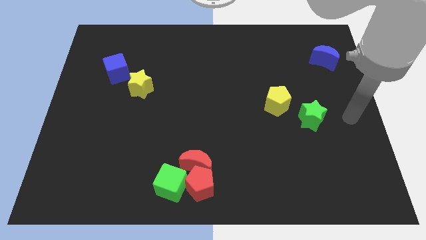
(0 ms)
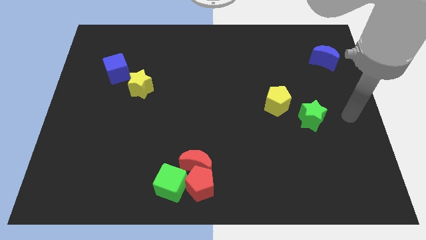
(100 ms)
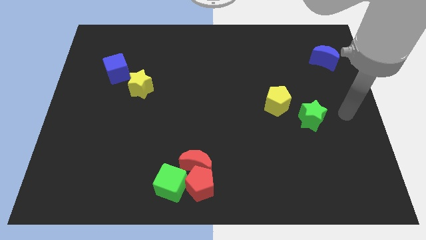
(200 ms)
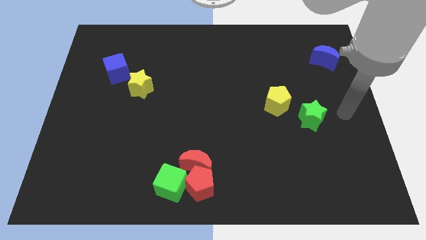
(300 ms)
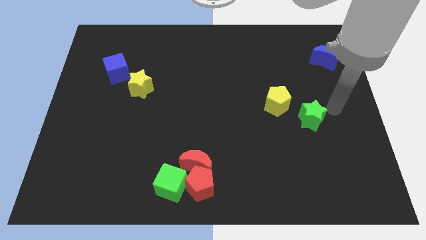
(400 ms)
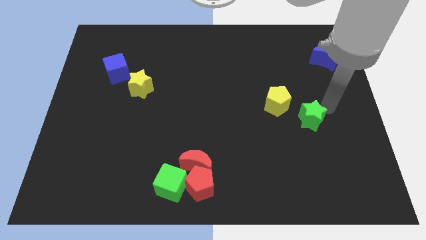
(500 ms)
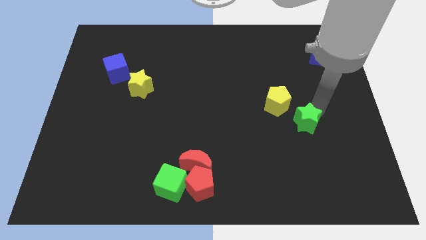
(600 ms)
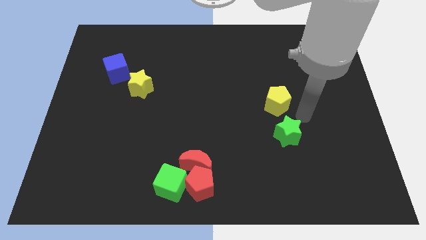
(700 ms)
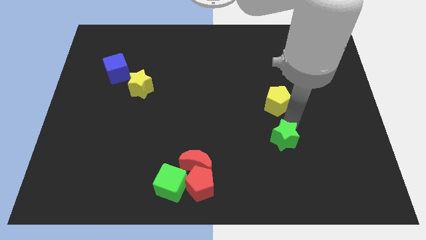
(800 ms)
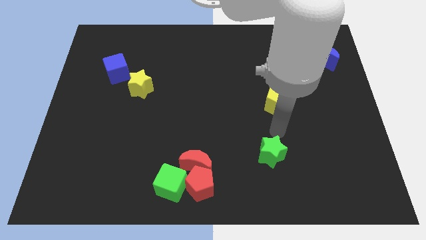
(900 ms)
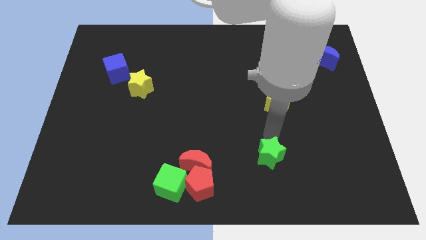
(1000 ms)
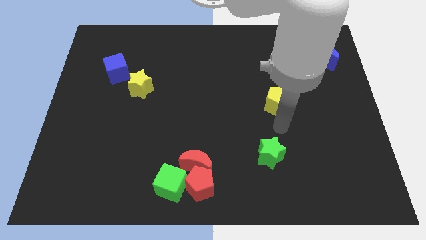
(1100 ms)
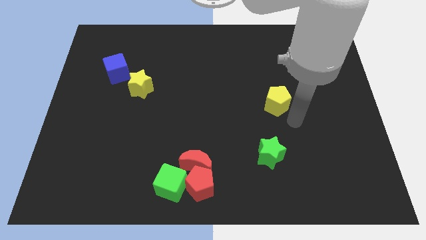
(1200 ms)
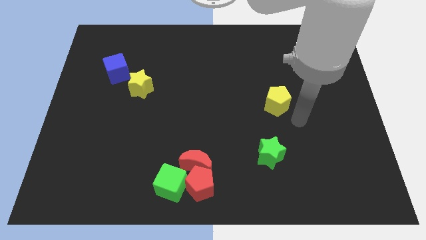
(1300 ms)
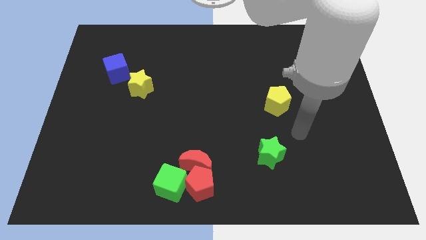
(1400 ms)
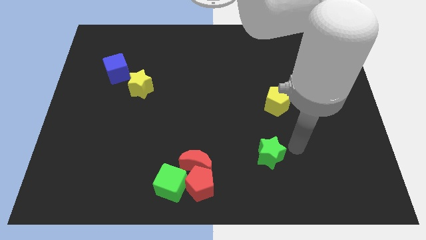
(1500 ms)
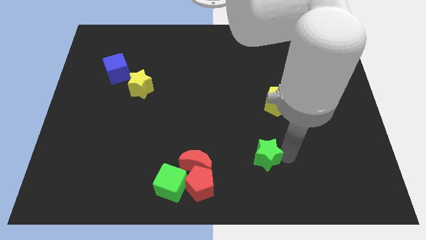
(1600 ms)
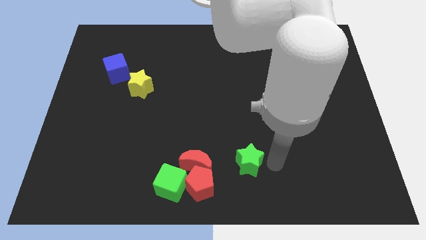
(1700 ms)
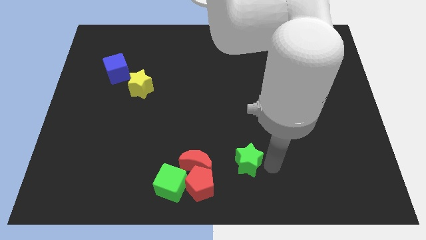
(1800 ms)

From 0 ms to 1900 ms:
push the green star towards the group of blocks

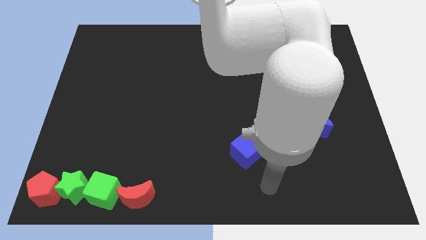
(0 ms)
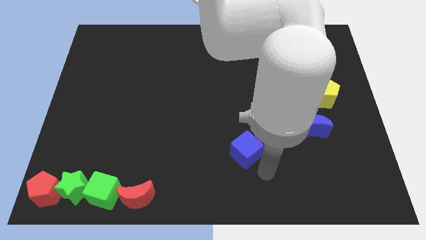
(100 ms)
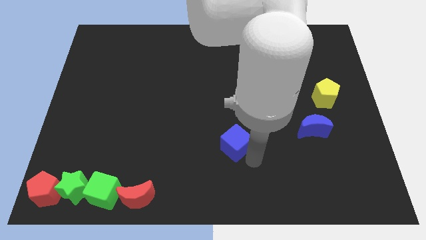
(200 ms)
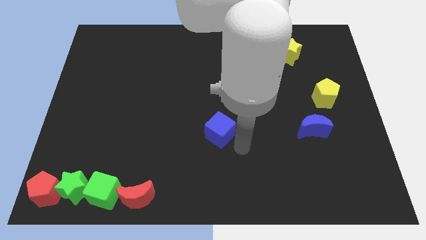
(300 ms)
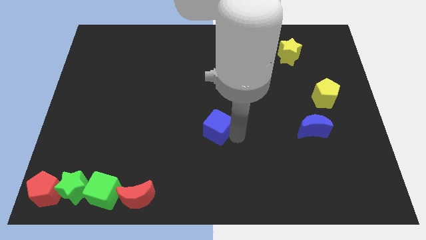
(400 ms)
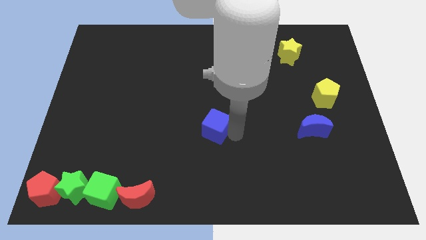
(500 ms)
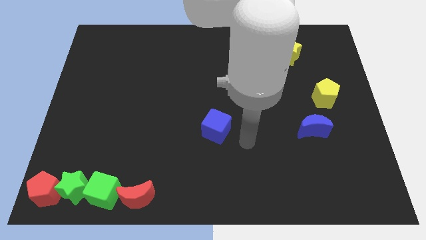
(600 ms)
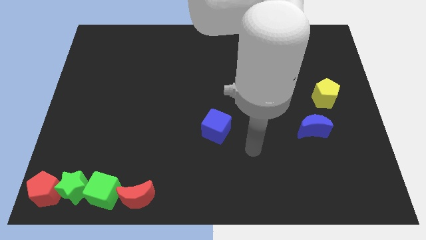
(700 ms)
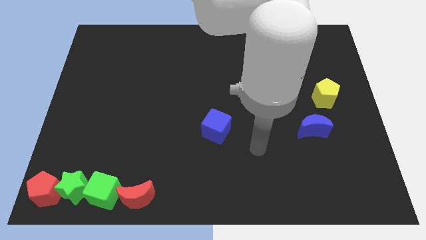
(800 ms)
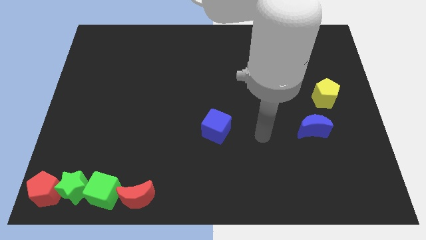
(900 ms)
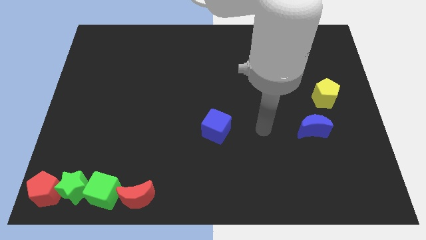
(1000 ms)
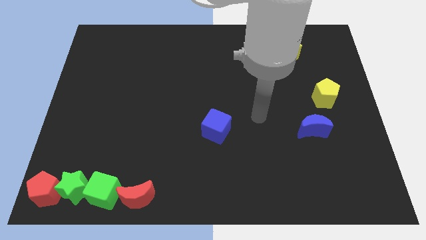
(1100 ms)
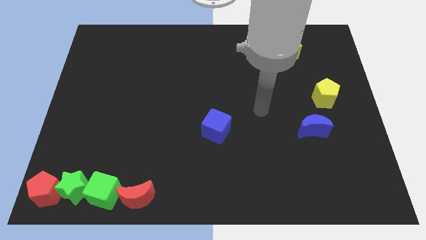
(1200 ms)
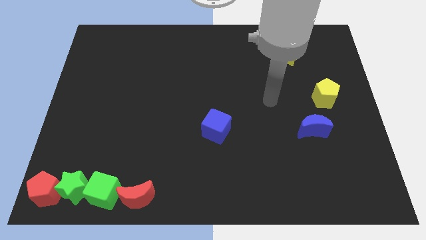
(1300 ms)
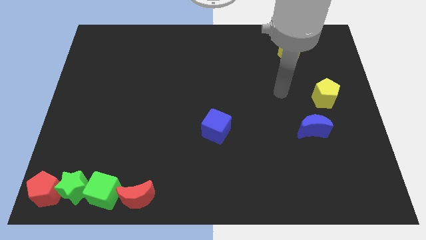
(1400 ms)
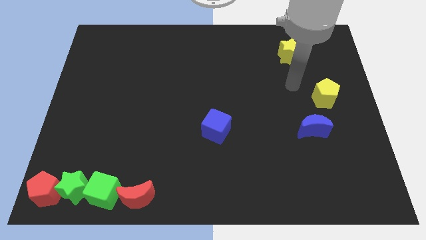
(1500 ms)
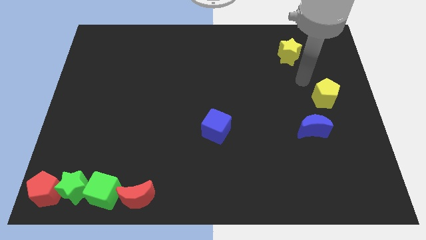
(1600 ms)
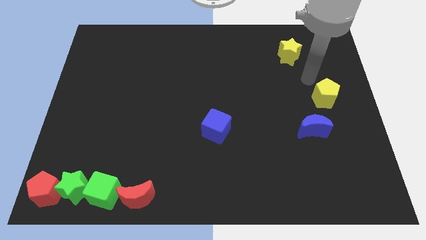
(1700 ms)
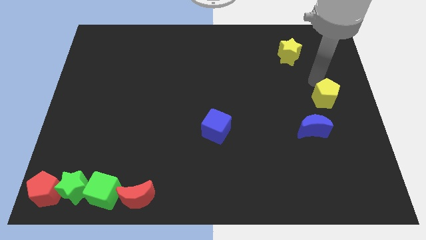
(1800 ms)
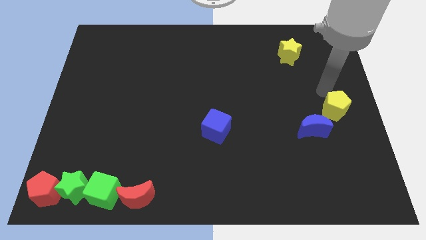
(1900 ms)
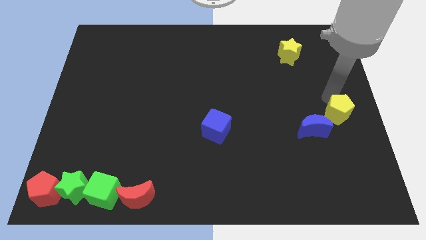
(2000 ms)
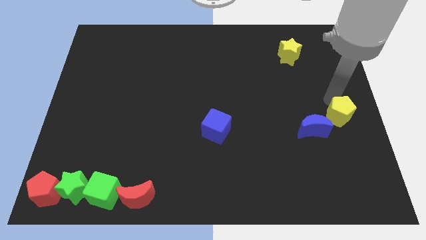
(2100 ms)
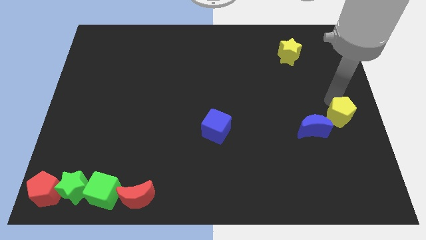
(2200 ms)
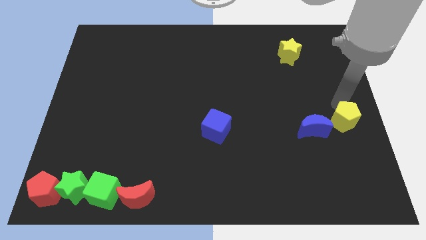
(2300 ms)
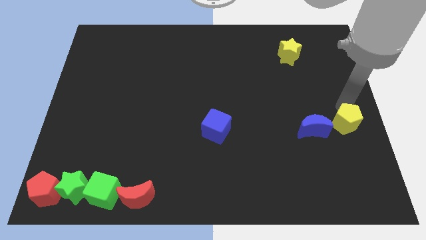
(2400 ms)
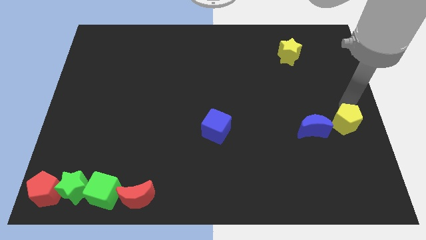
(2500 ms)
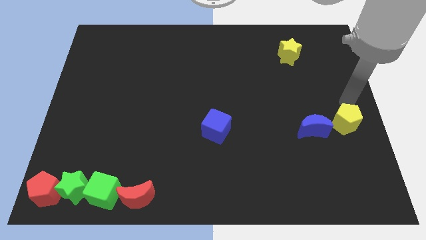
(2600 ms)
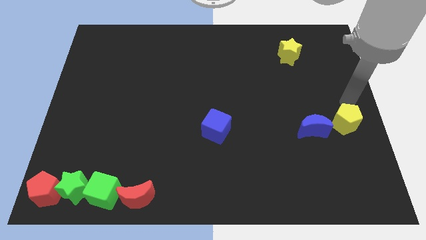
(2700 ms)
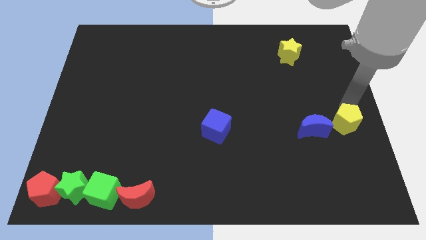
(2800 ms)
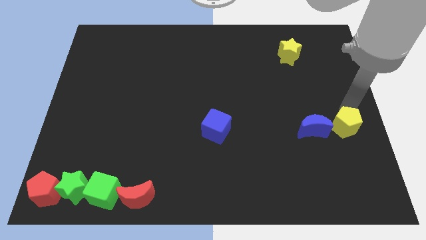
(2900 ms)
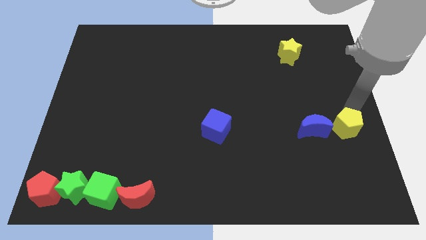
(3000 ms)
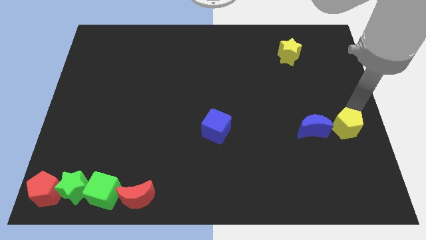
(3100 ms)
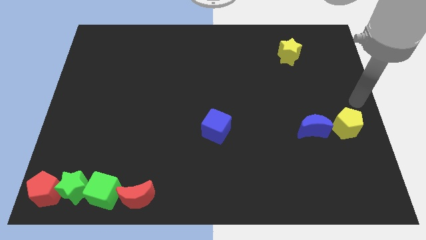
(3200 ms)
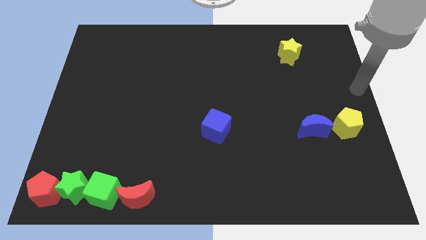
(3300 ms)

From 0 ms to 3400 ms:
push yellow pentagon beside blue crescent

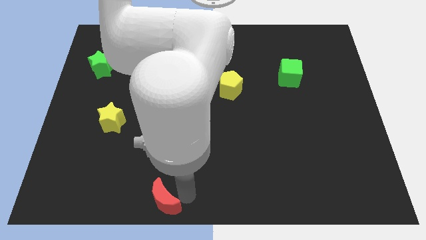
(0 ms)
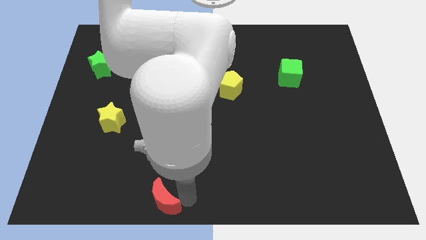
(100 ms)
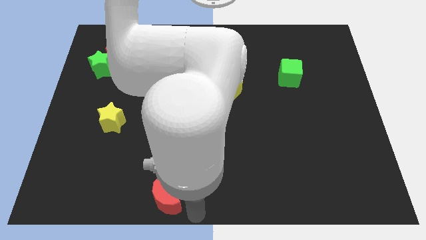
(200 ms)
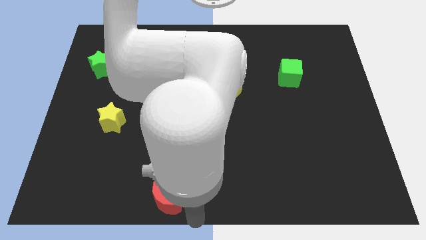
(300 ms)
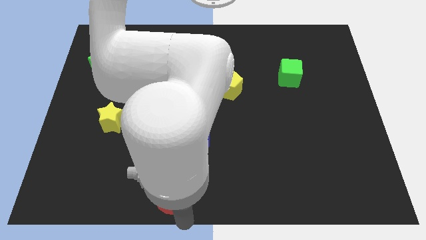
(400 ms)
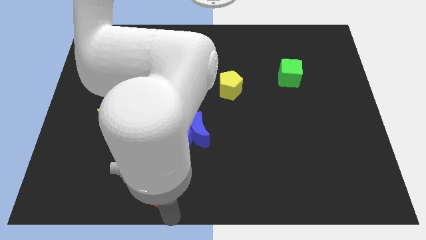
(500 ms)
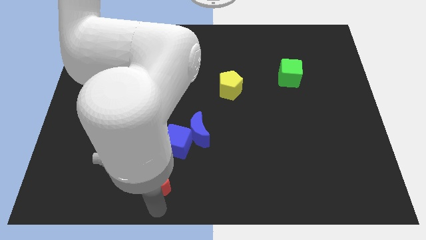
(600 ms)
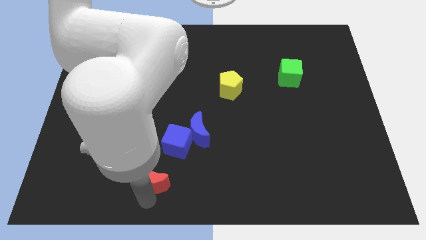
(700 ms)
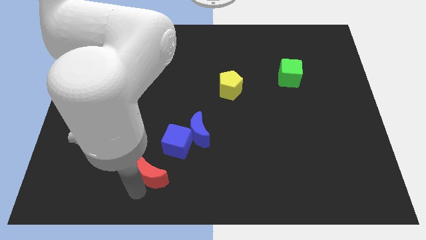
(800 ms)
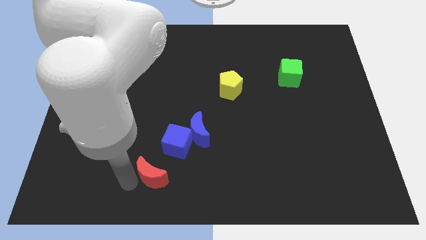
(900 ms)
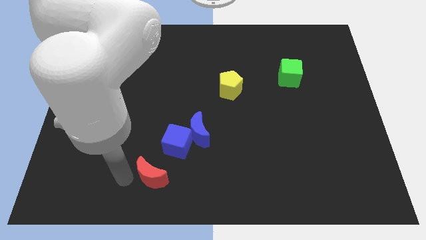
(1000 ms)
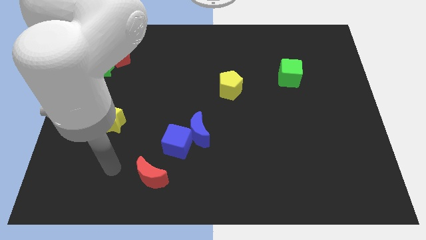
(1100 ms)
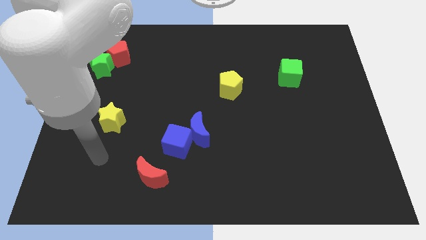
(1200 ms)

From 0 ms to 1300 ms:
push red crescent towards the bottom side of the blue cube

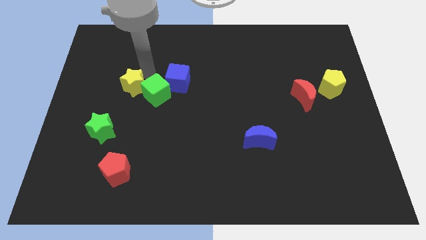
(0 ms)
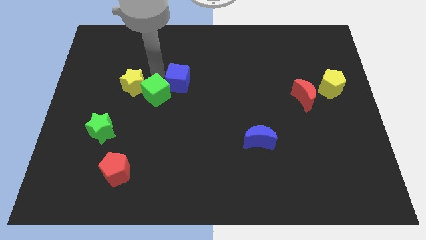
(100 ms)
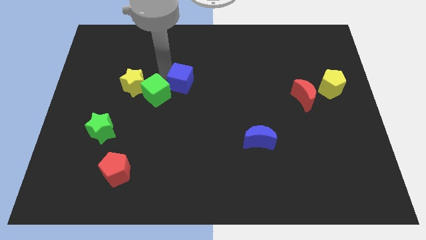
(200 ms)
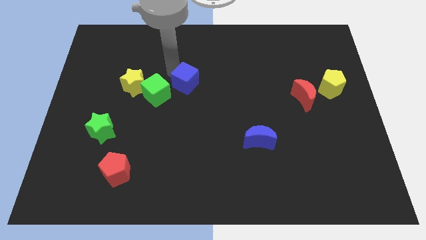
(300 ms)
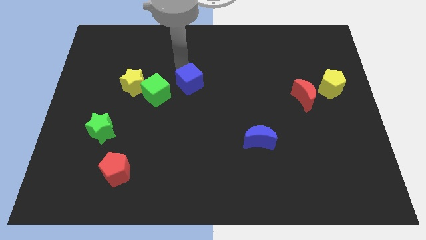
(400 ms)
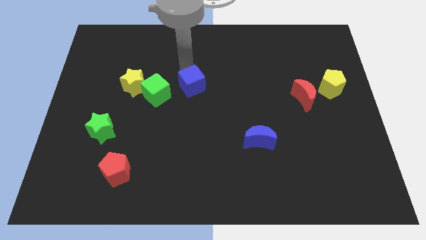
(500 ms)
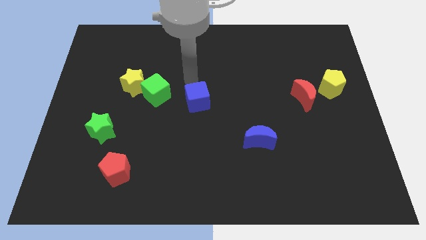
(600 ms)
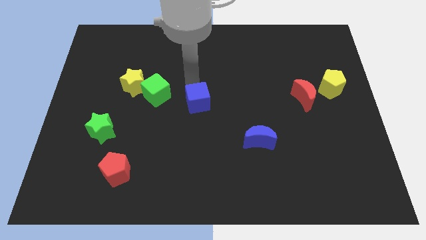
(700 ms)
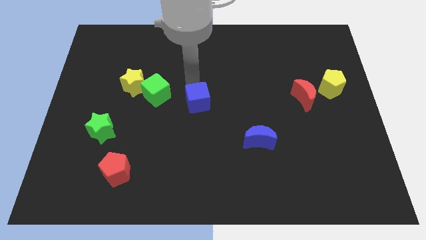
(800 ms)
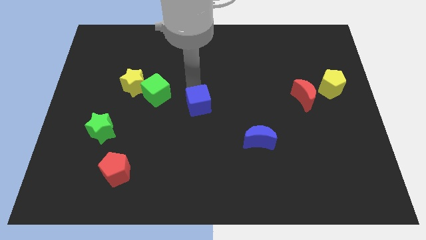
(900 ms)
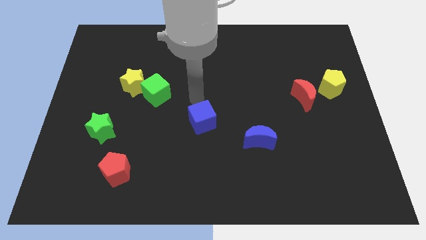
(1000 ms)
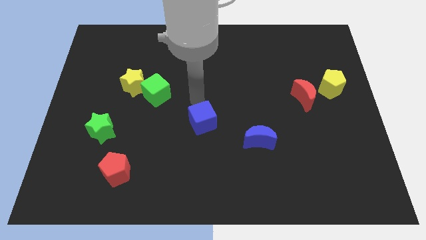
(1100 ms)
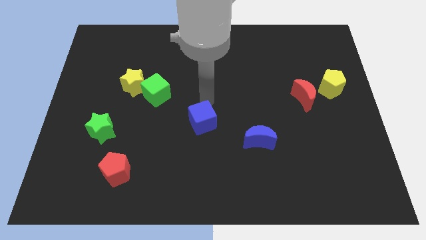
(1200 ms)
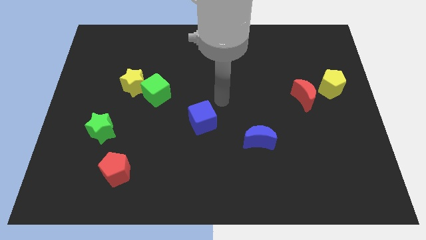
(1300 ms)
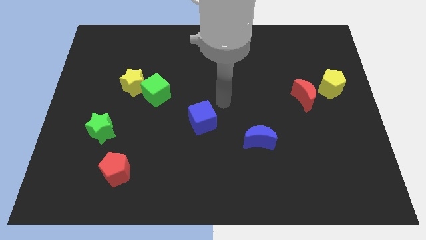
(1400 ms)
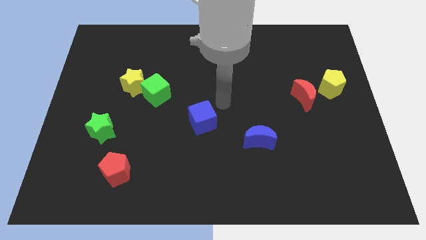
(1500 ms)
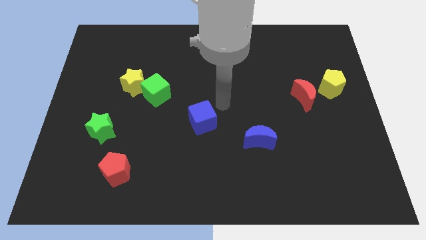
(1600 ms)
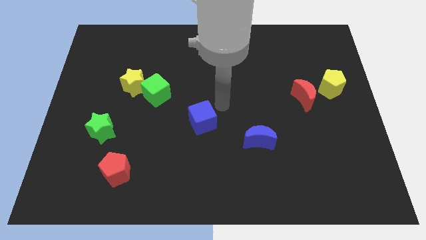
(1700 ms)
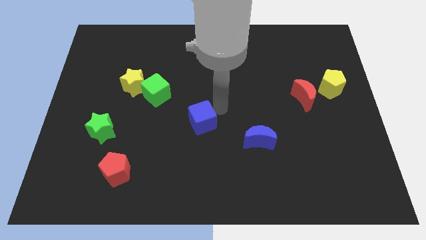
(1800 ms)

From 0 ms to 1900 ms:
place the blue cube diagonally below red pentagon

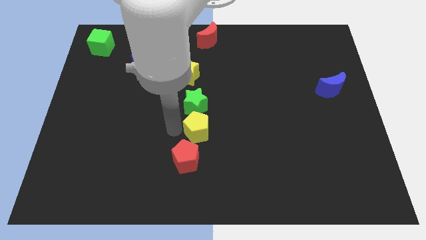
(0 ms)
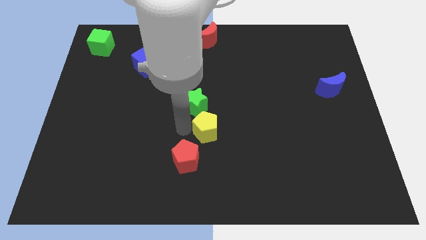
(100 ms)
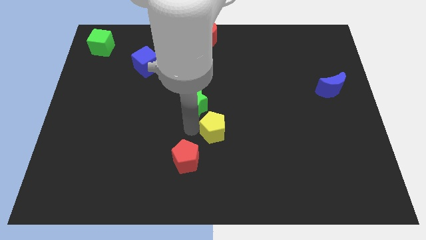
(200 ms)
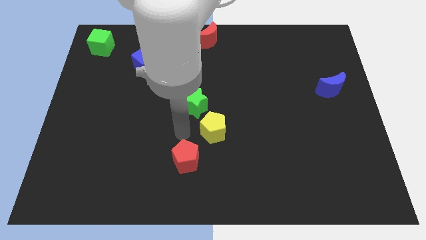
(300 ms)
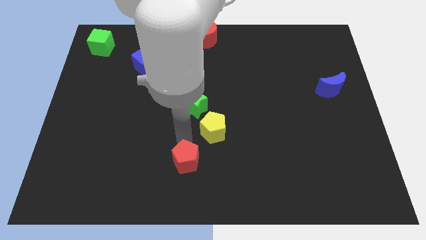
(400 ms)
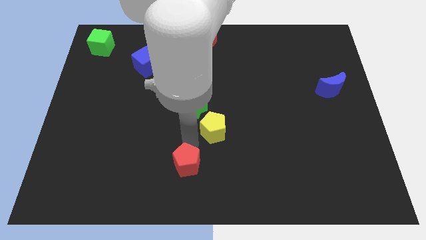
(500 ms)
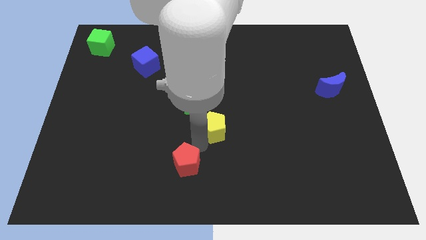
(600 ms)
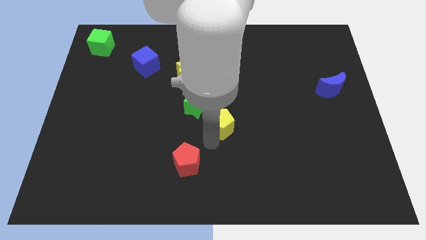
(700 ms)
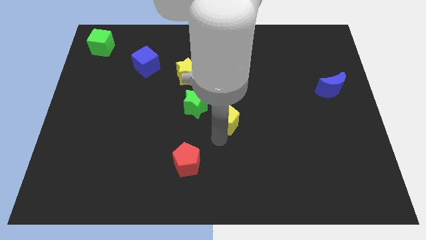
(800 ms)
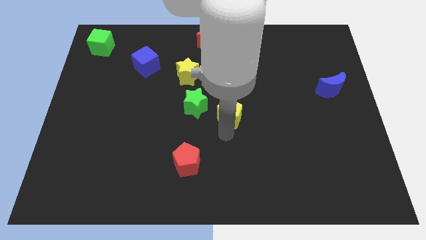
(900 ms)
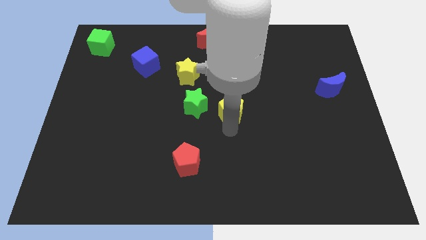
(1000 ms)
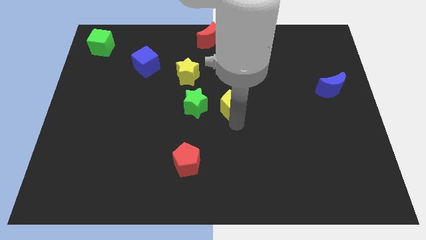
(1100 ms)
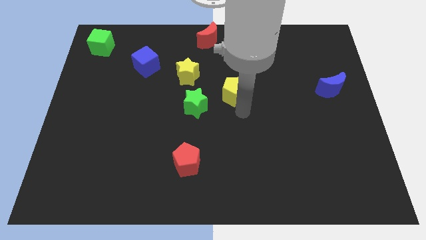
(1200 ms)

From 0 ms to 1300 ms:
push the yellow pentagon to the right of the green star
